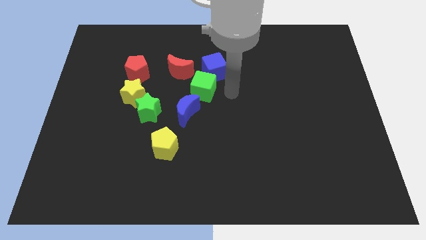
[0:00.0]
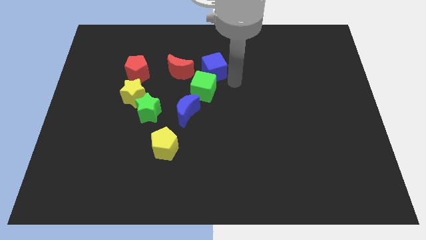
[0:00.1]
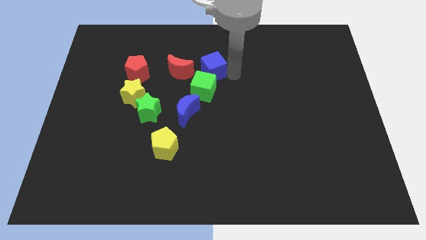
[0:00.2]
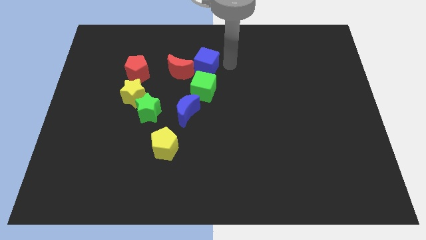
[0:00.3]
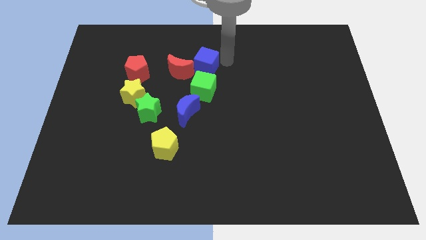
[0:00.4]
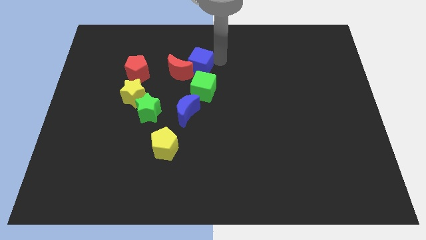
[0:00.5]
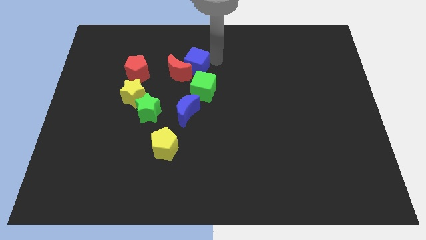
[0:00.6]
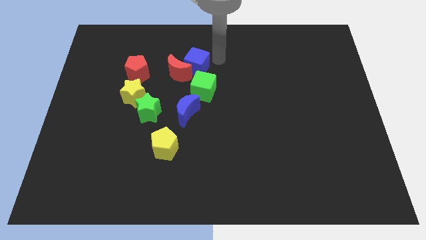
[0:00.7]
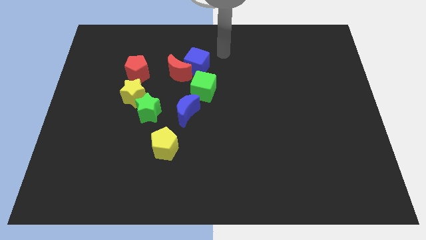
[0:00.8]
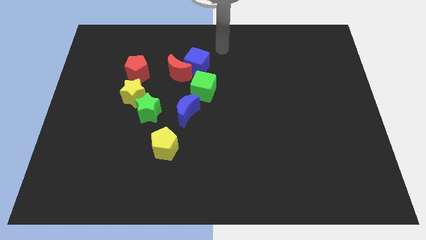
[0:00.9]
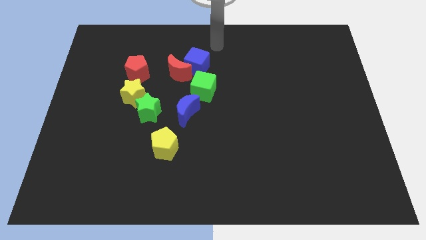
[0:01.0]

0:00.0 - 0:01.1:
attach the blue cube to the red moon

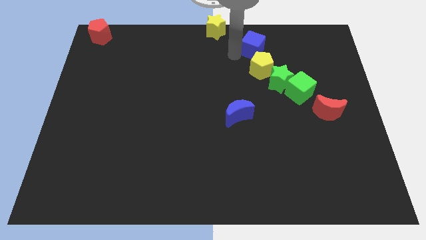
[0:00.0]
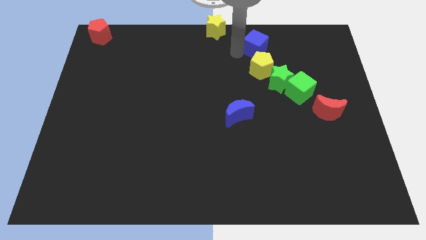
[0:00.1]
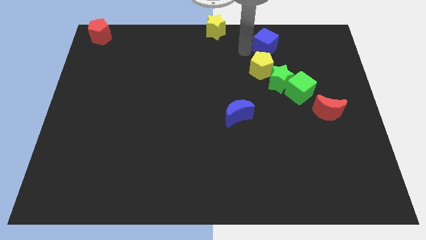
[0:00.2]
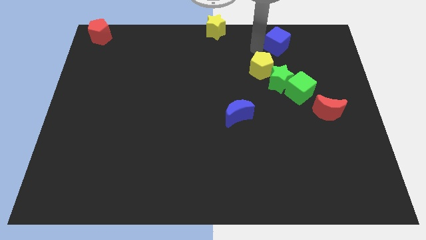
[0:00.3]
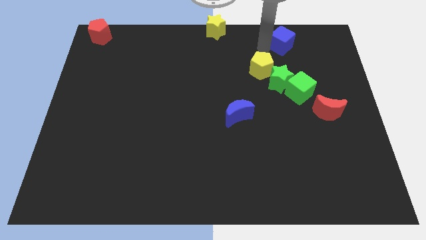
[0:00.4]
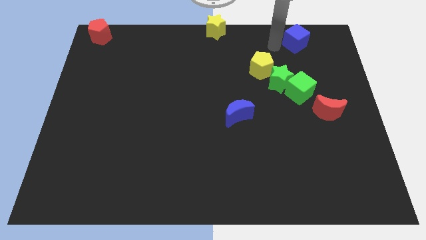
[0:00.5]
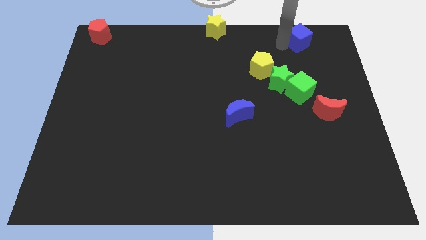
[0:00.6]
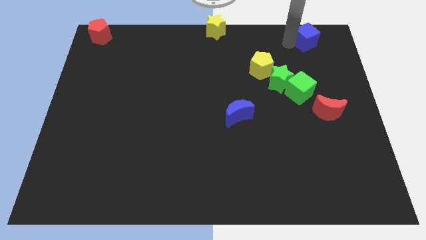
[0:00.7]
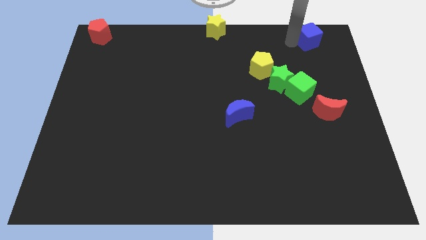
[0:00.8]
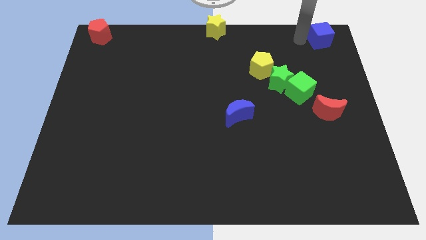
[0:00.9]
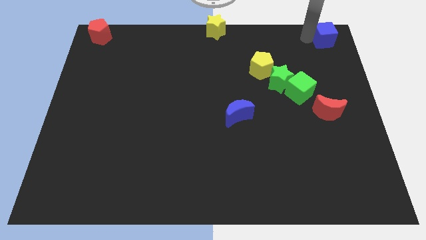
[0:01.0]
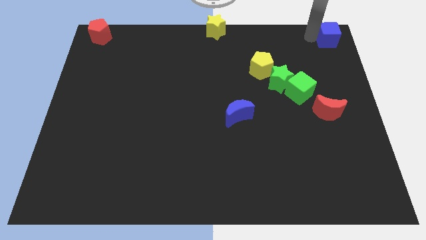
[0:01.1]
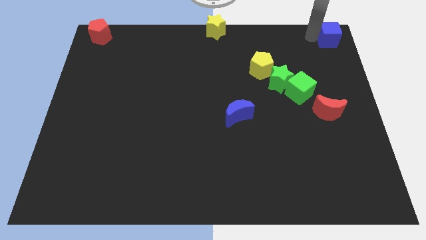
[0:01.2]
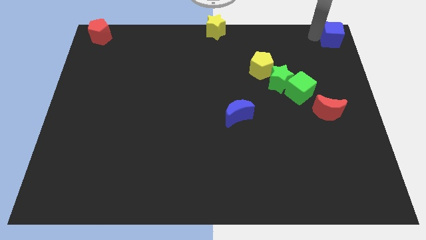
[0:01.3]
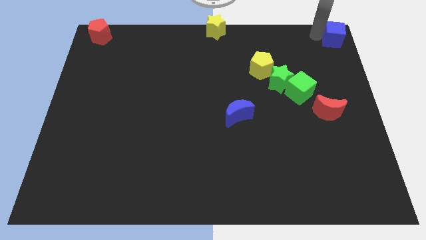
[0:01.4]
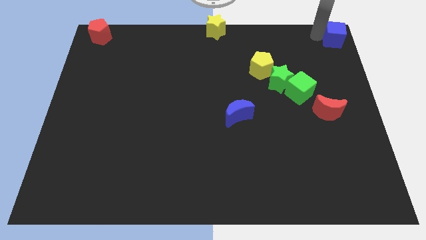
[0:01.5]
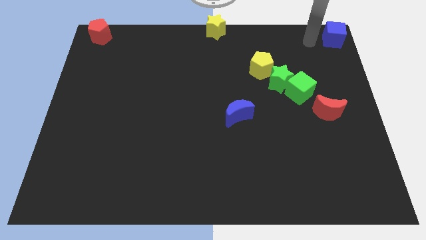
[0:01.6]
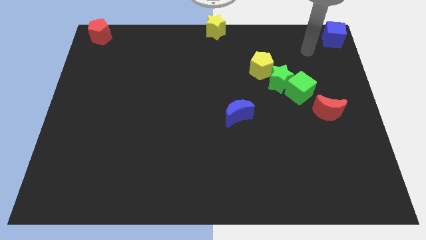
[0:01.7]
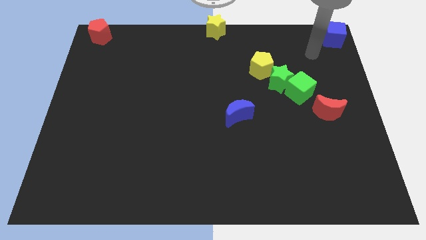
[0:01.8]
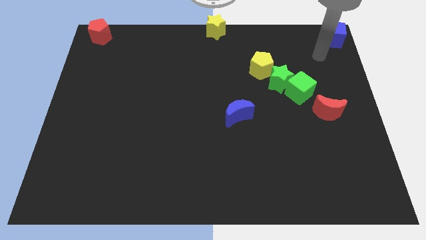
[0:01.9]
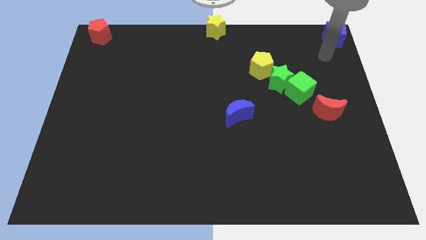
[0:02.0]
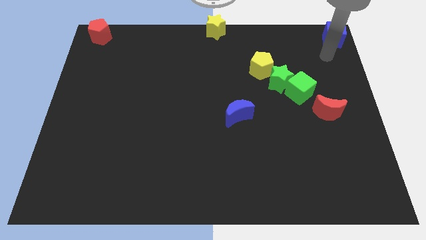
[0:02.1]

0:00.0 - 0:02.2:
place the blue cube on the top right of the board

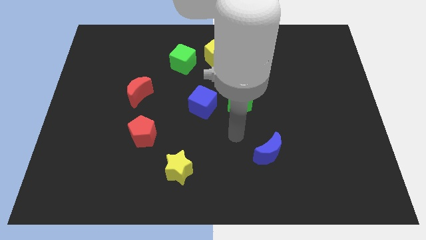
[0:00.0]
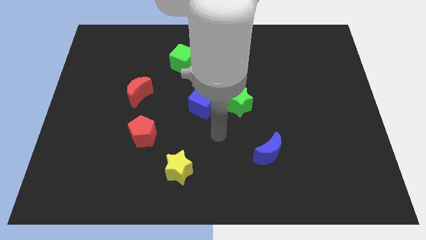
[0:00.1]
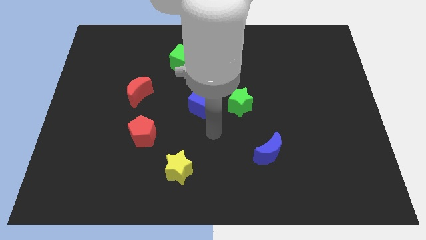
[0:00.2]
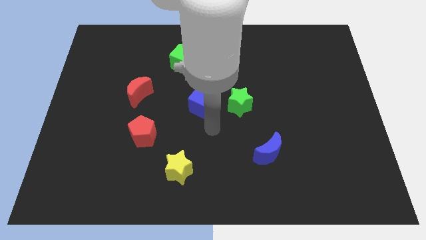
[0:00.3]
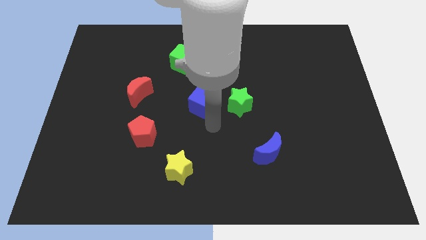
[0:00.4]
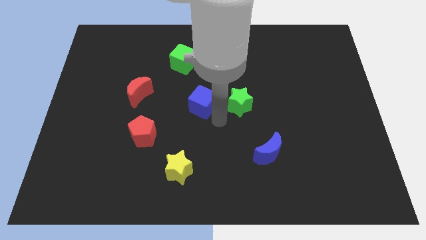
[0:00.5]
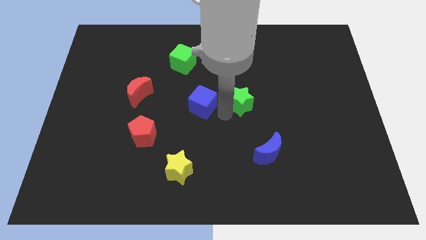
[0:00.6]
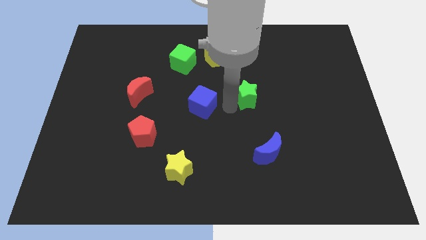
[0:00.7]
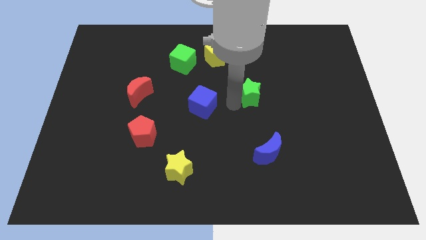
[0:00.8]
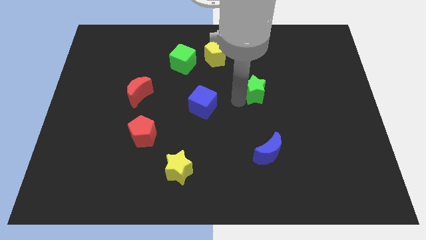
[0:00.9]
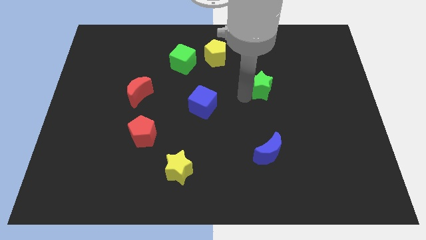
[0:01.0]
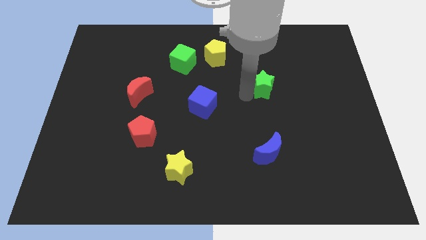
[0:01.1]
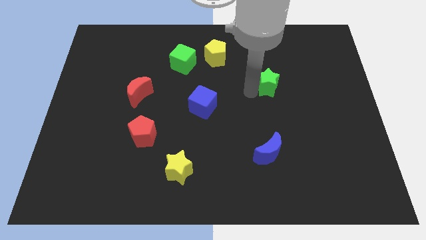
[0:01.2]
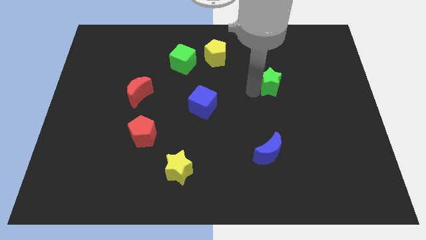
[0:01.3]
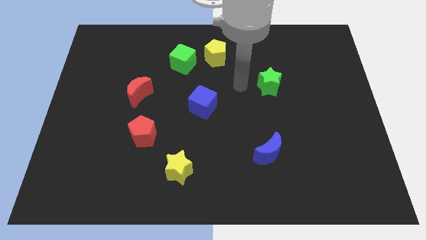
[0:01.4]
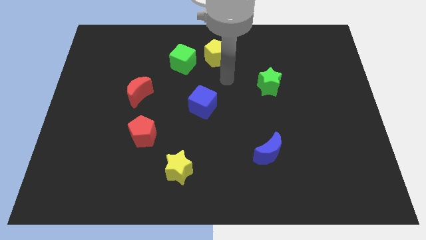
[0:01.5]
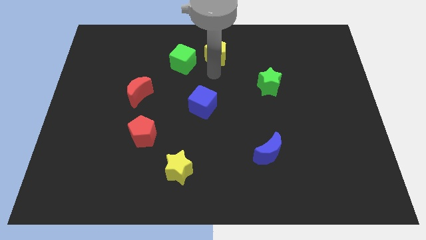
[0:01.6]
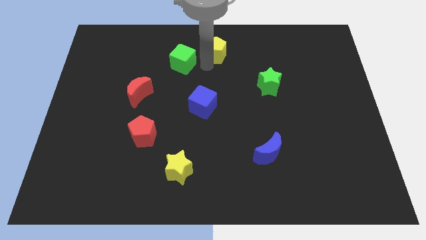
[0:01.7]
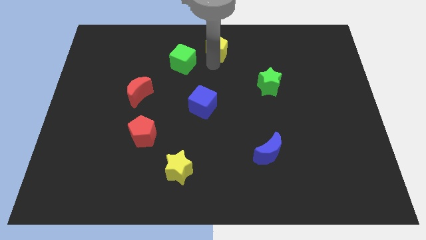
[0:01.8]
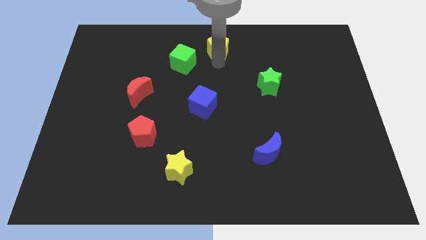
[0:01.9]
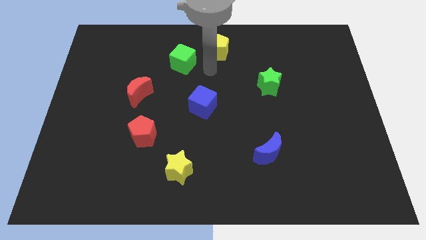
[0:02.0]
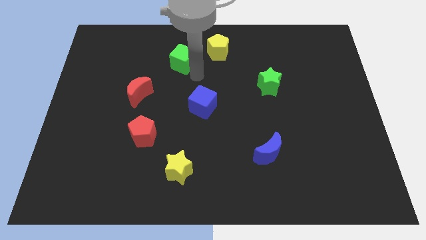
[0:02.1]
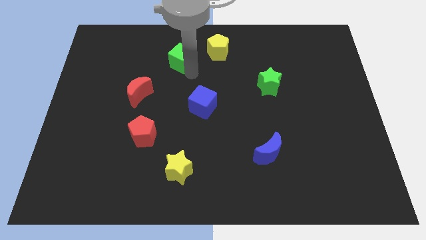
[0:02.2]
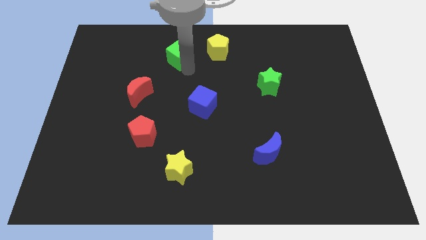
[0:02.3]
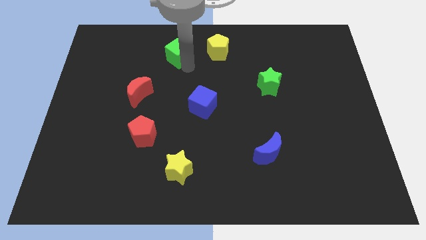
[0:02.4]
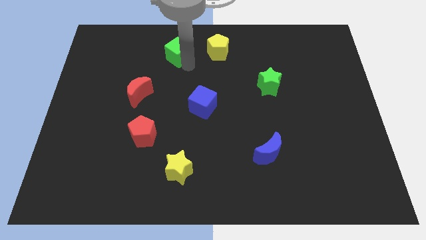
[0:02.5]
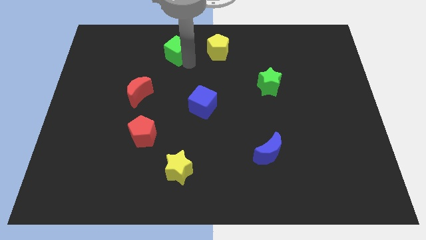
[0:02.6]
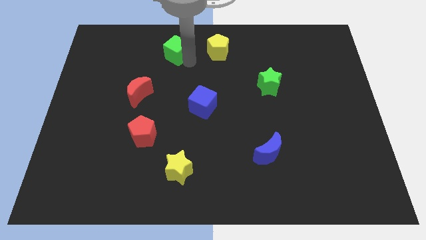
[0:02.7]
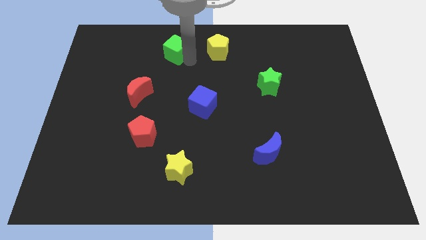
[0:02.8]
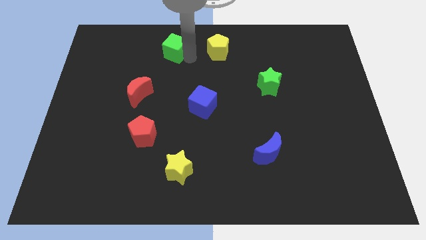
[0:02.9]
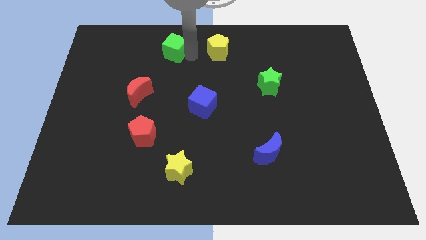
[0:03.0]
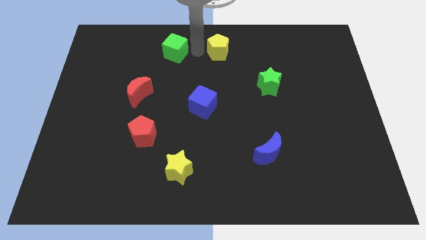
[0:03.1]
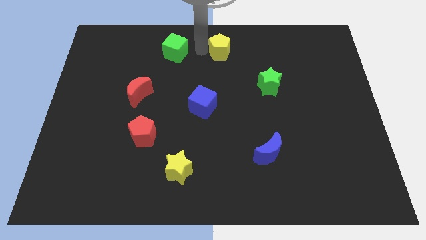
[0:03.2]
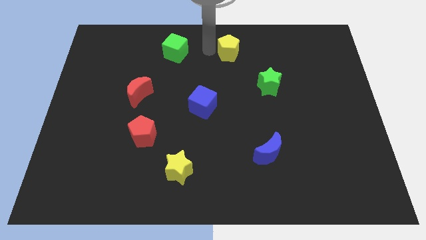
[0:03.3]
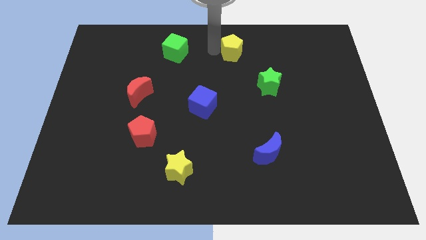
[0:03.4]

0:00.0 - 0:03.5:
move the green star towards the right side of the board

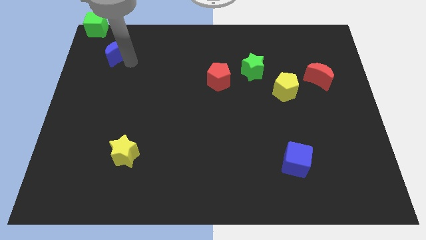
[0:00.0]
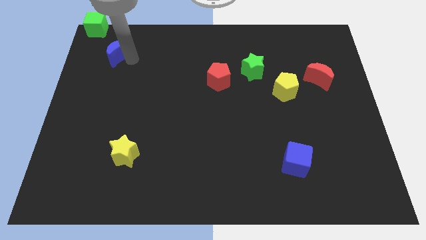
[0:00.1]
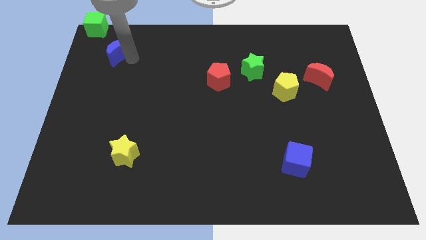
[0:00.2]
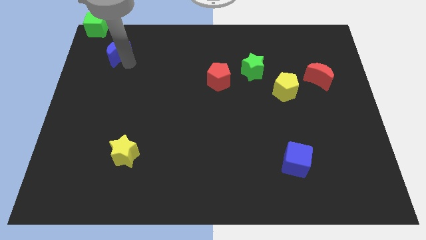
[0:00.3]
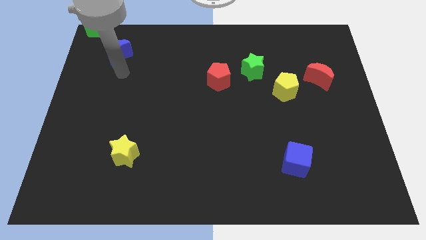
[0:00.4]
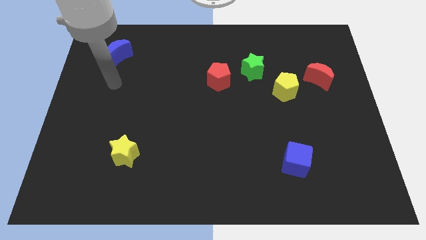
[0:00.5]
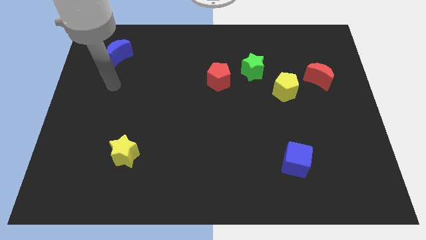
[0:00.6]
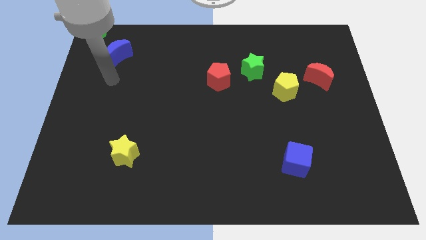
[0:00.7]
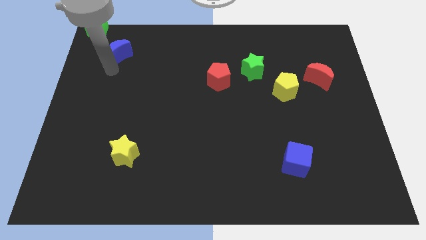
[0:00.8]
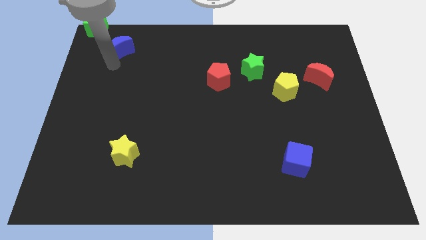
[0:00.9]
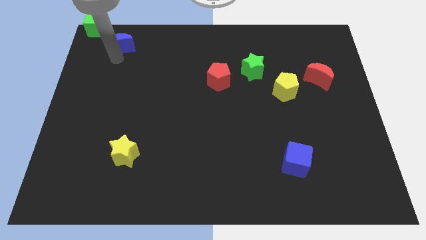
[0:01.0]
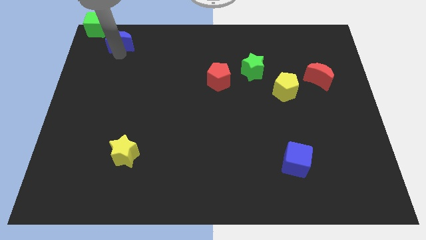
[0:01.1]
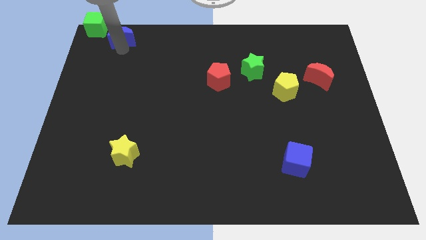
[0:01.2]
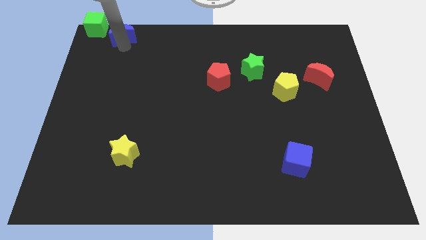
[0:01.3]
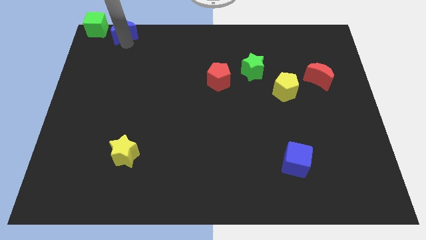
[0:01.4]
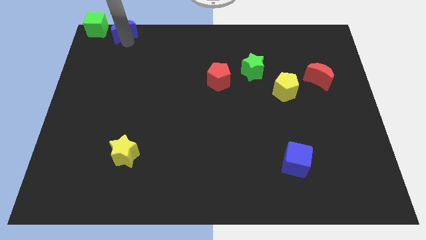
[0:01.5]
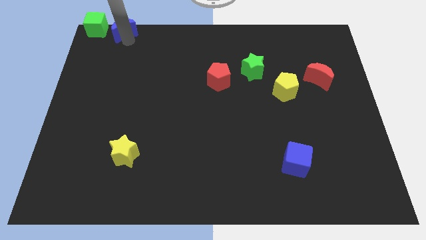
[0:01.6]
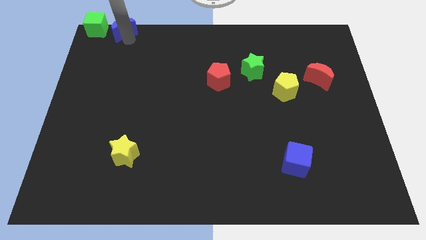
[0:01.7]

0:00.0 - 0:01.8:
move the blue moon parallel right to the green cube

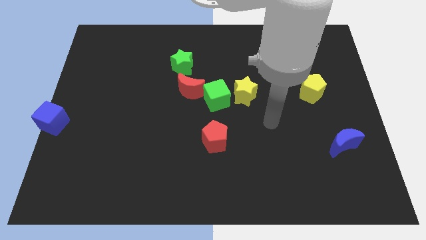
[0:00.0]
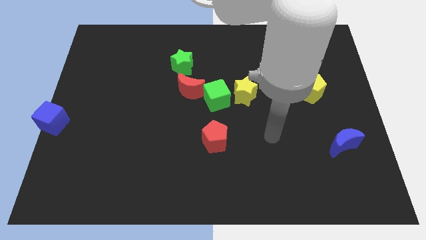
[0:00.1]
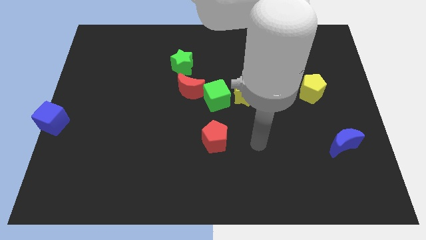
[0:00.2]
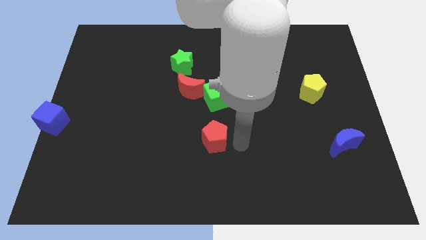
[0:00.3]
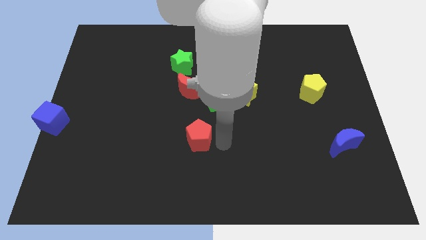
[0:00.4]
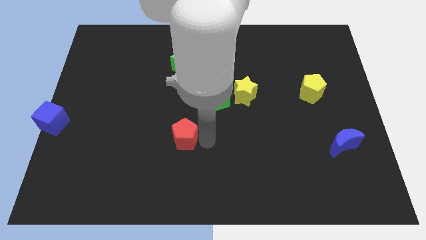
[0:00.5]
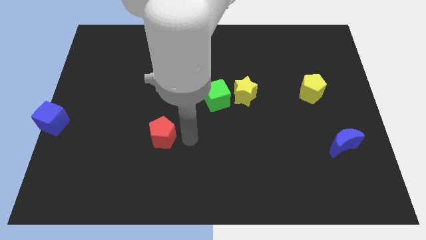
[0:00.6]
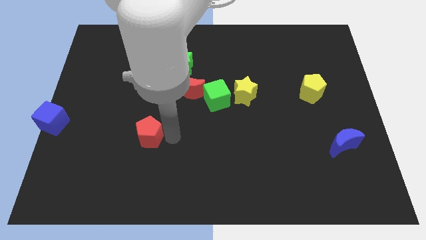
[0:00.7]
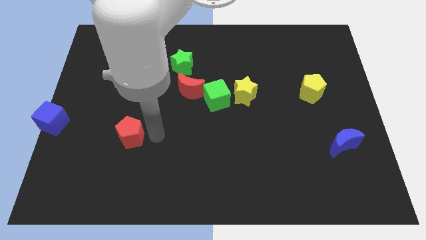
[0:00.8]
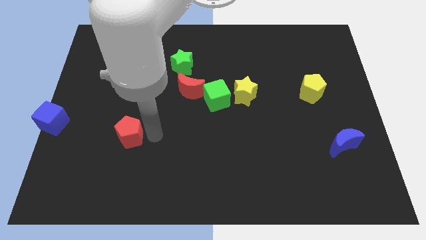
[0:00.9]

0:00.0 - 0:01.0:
move red pentagon to left side
